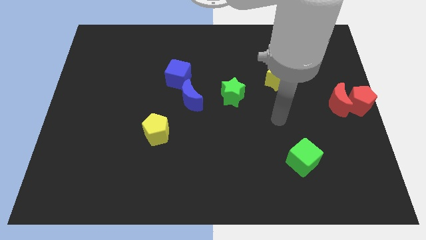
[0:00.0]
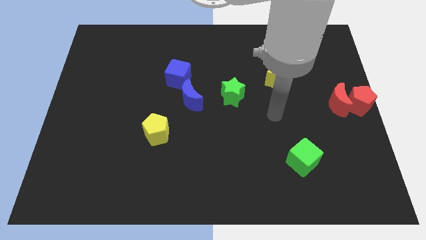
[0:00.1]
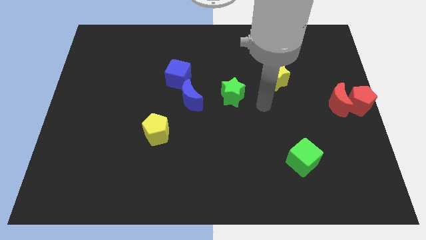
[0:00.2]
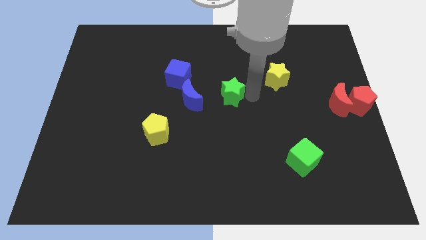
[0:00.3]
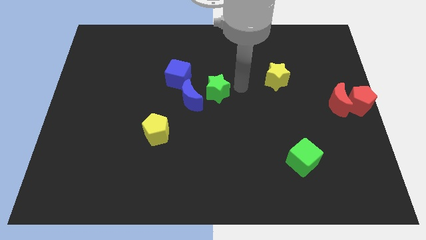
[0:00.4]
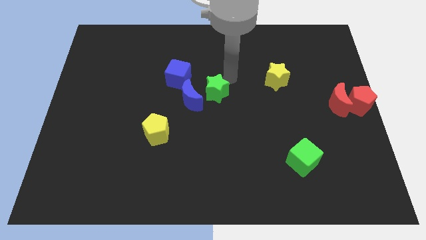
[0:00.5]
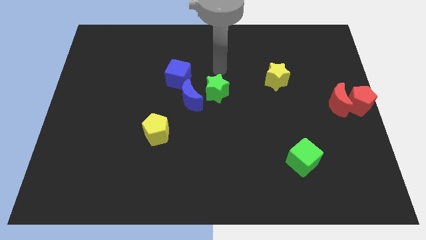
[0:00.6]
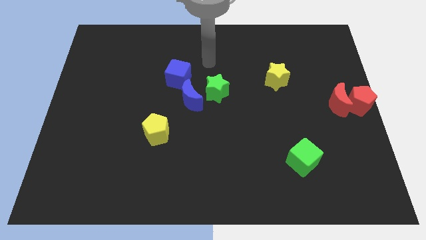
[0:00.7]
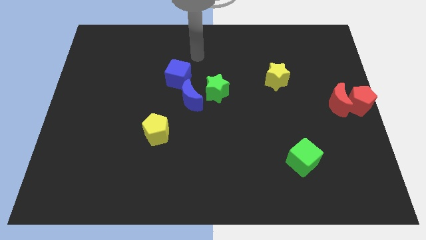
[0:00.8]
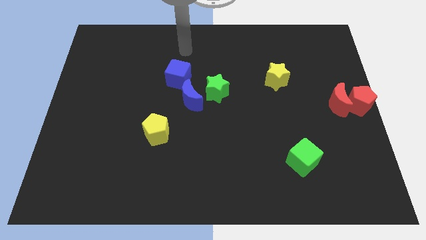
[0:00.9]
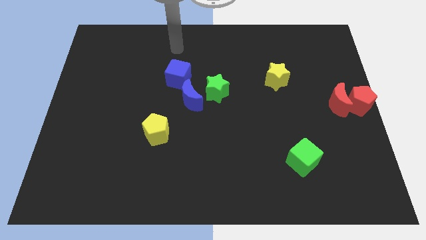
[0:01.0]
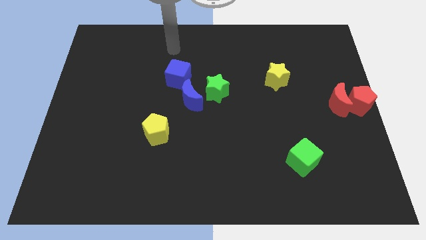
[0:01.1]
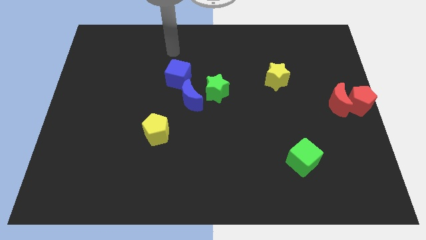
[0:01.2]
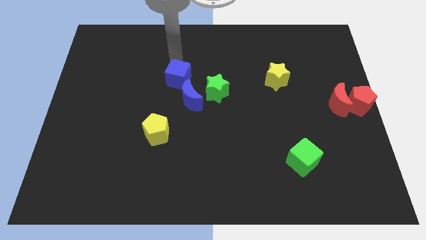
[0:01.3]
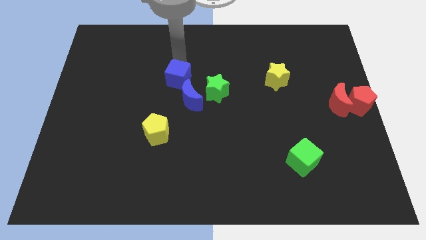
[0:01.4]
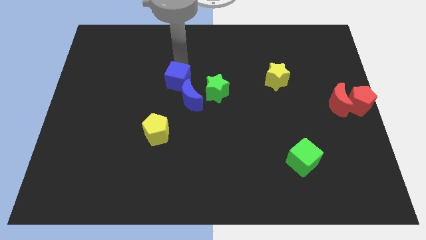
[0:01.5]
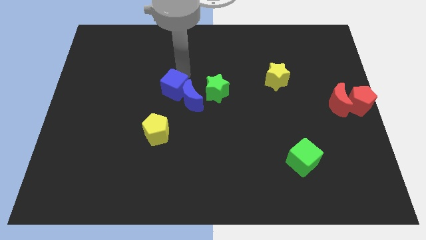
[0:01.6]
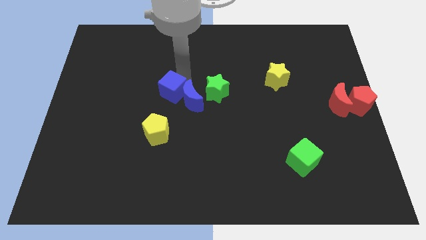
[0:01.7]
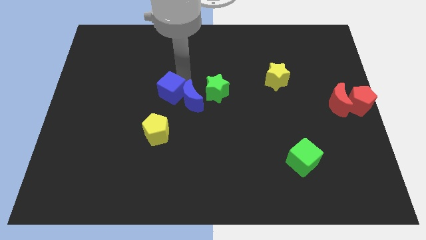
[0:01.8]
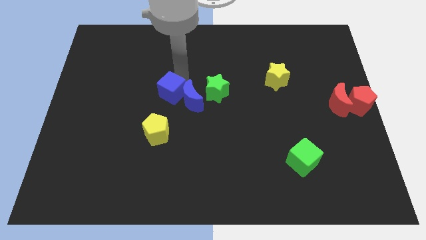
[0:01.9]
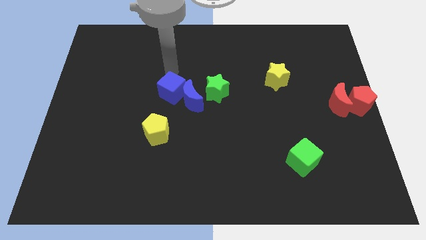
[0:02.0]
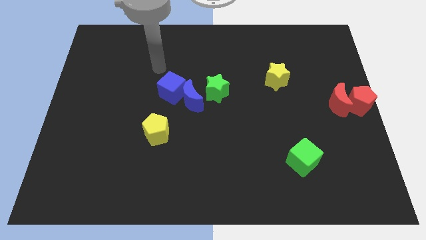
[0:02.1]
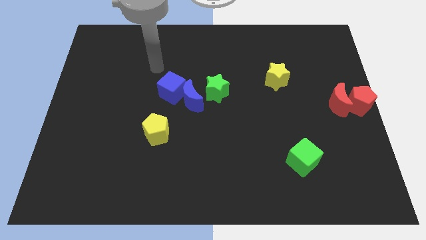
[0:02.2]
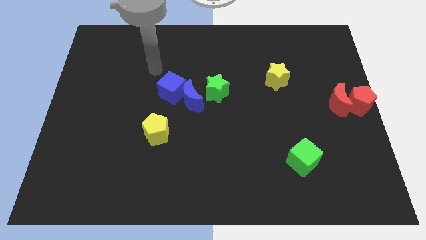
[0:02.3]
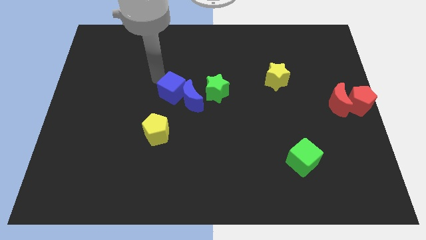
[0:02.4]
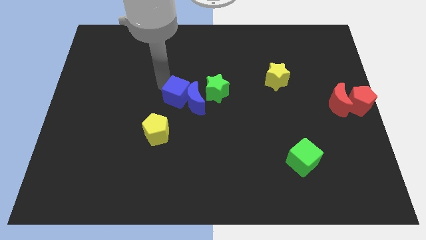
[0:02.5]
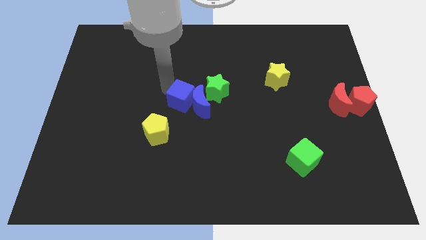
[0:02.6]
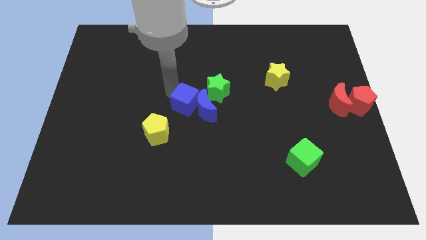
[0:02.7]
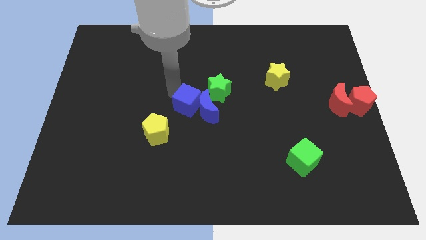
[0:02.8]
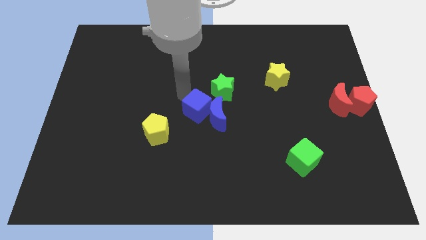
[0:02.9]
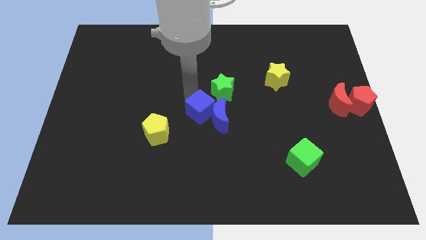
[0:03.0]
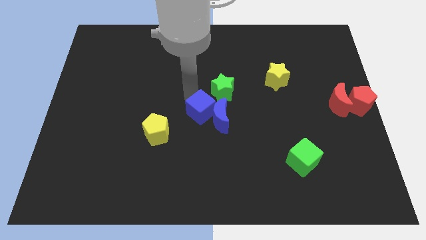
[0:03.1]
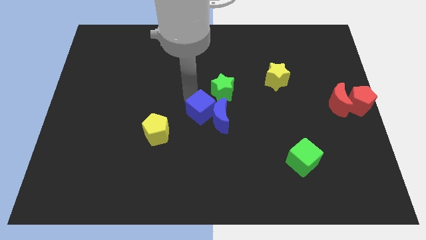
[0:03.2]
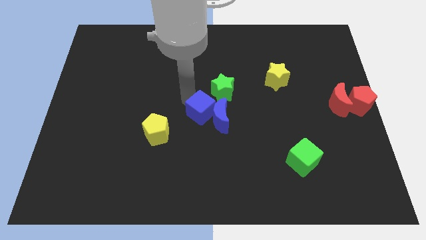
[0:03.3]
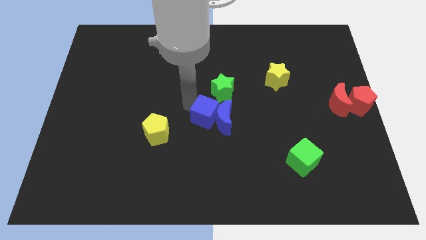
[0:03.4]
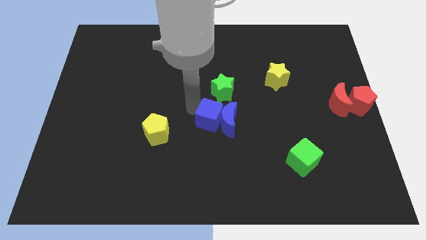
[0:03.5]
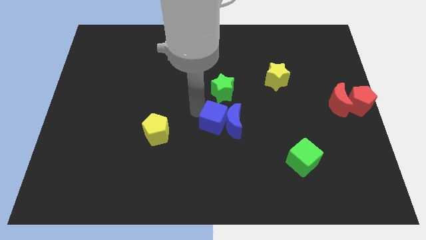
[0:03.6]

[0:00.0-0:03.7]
push both the blue blocks at the bottom side of the green star

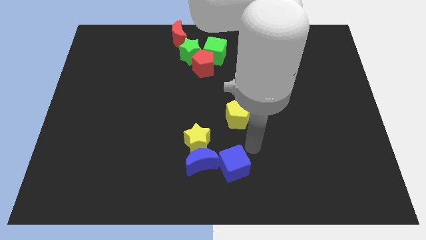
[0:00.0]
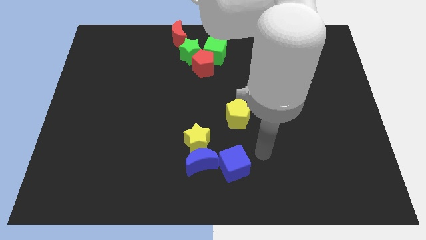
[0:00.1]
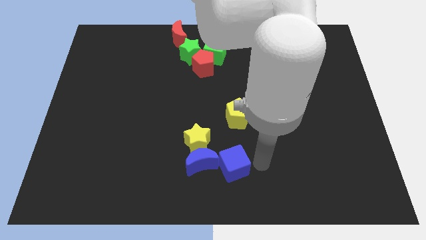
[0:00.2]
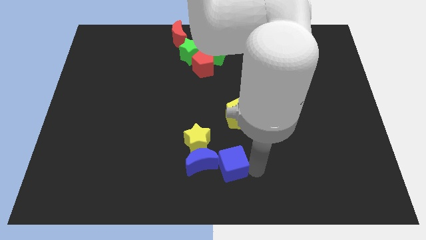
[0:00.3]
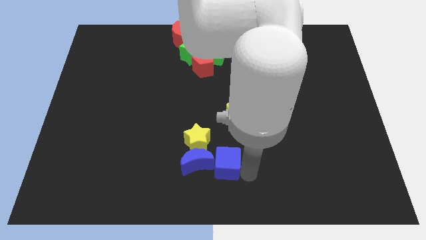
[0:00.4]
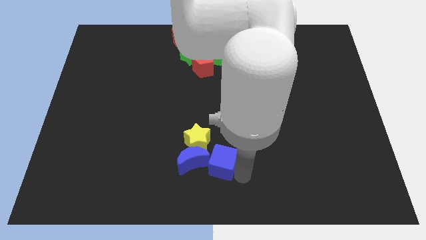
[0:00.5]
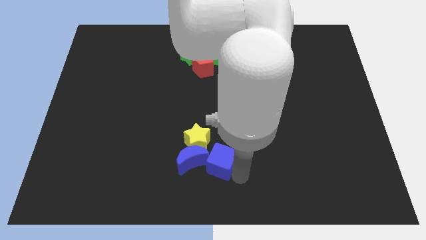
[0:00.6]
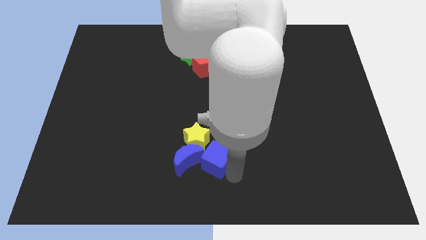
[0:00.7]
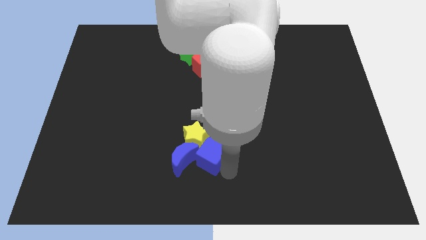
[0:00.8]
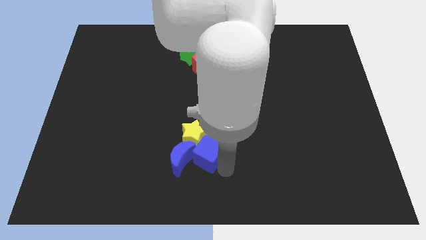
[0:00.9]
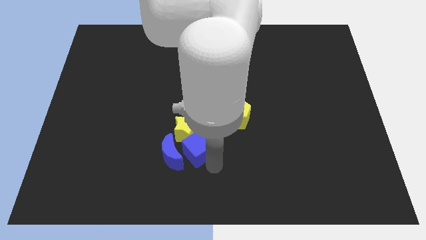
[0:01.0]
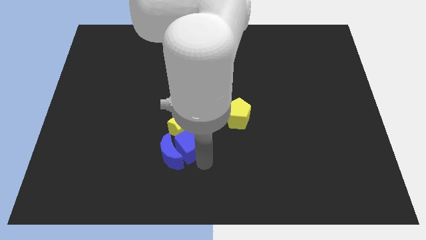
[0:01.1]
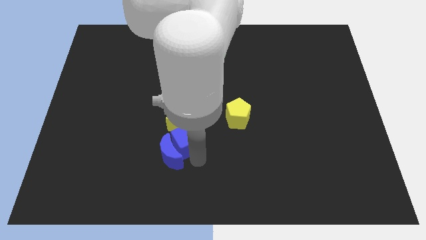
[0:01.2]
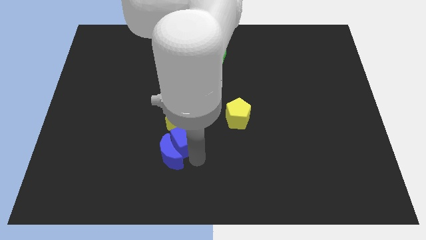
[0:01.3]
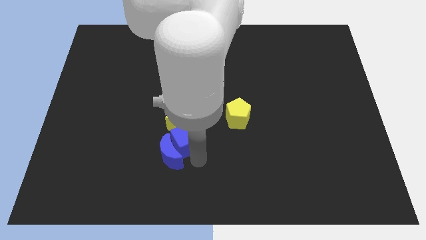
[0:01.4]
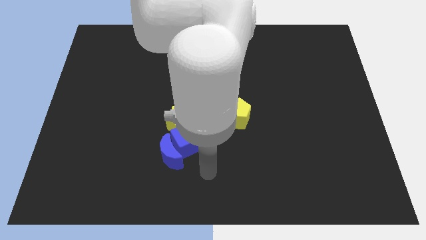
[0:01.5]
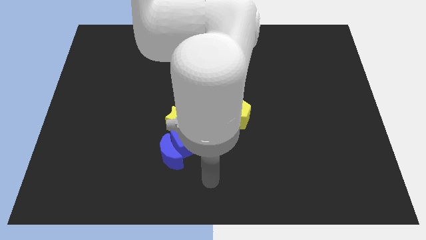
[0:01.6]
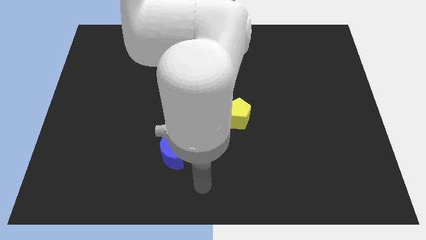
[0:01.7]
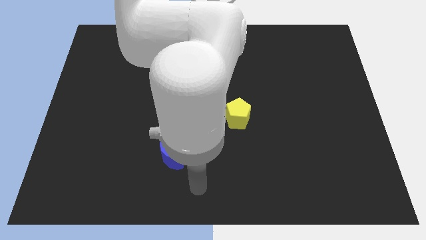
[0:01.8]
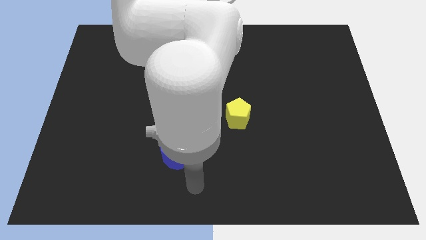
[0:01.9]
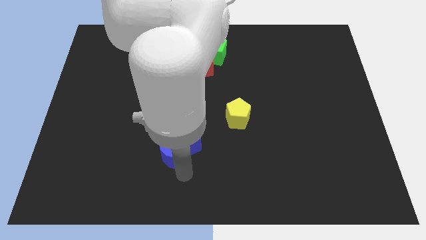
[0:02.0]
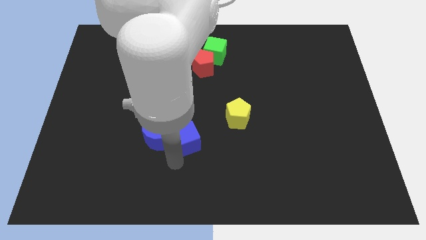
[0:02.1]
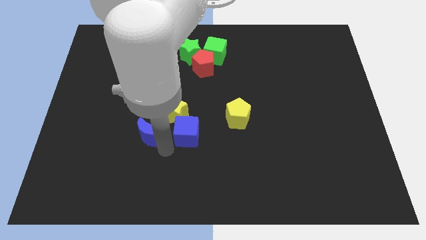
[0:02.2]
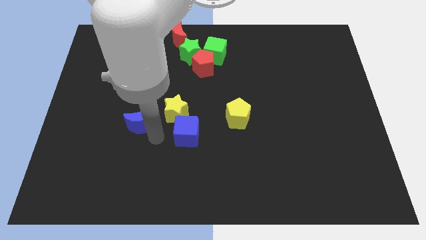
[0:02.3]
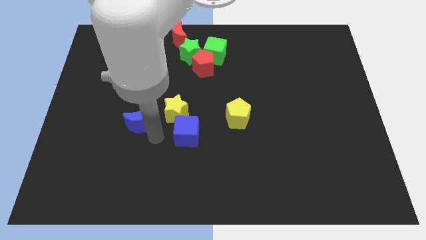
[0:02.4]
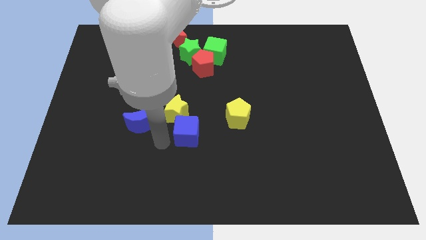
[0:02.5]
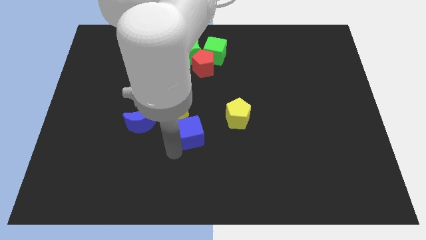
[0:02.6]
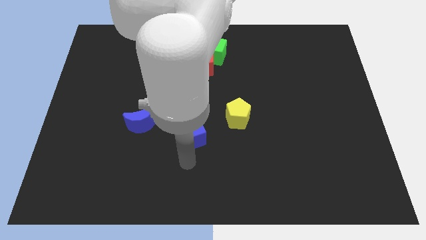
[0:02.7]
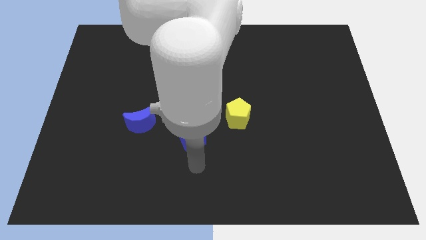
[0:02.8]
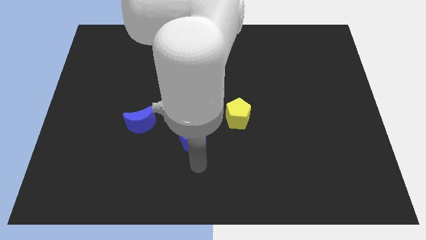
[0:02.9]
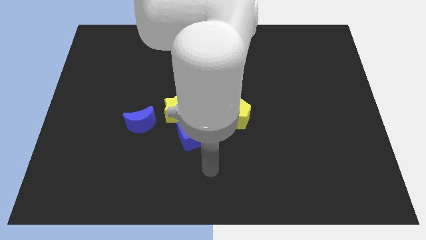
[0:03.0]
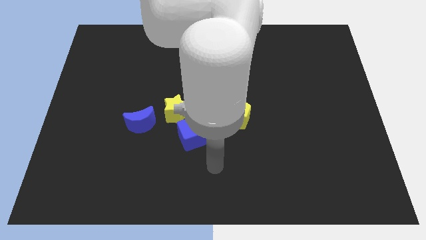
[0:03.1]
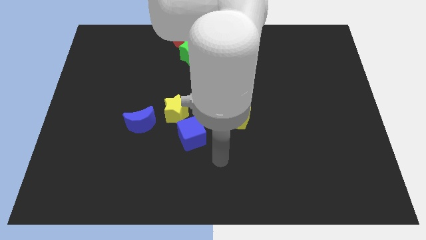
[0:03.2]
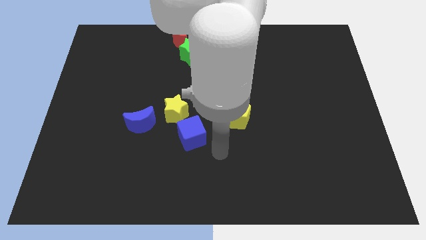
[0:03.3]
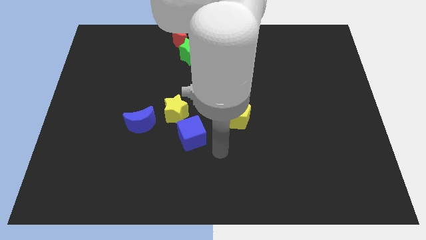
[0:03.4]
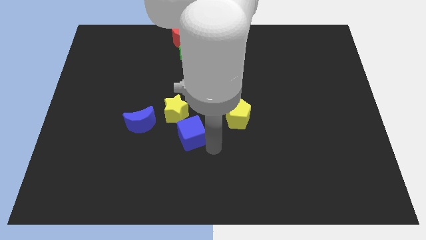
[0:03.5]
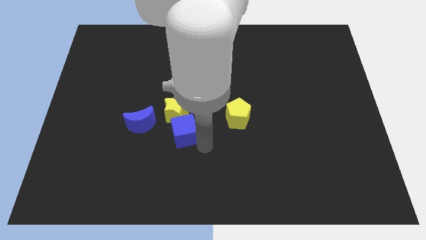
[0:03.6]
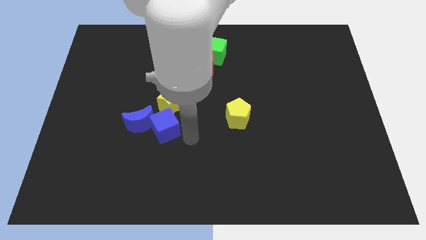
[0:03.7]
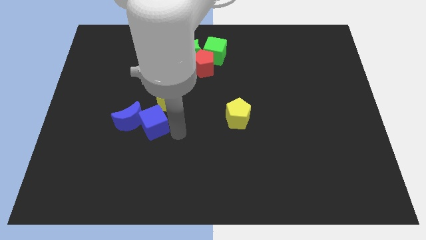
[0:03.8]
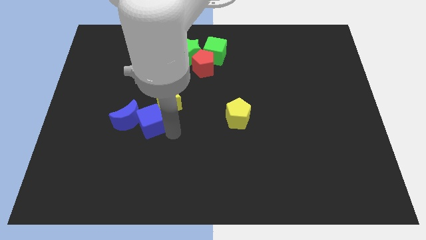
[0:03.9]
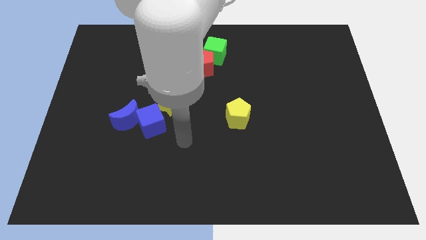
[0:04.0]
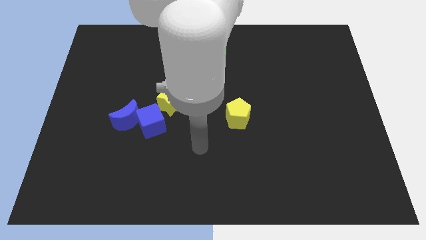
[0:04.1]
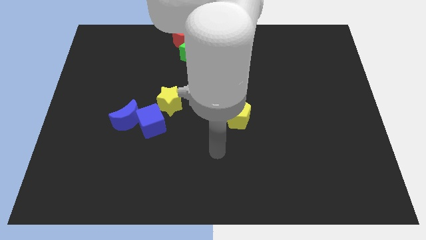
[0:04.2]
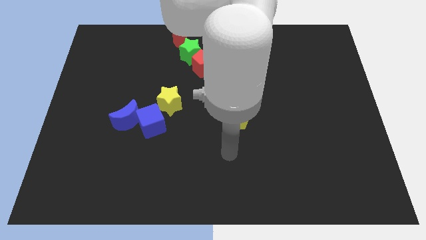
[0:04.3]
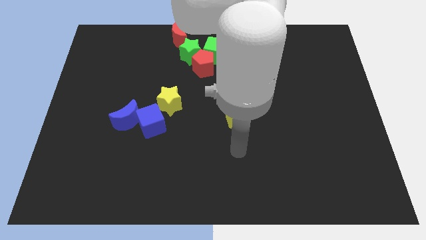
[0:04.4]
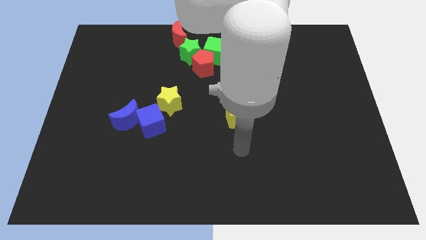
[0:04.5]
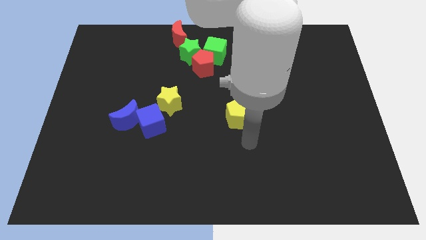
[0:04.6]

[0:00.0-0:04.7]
move blue blocks to the left of the yellow star

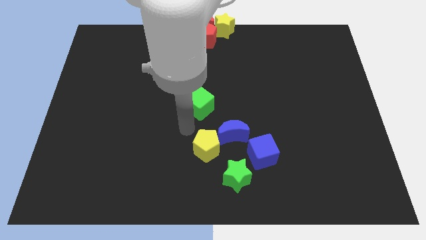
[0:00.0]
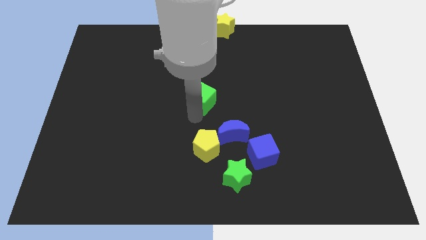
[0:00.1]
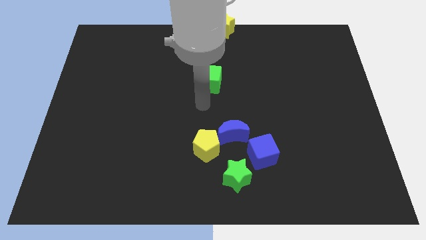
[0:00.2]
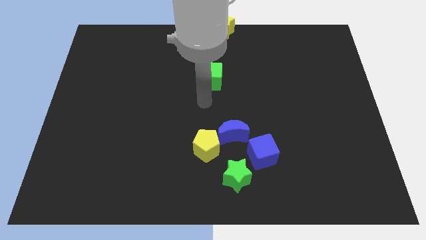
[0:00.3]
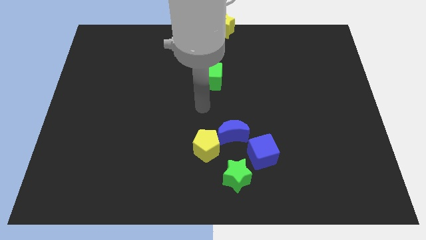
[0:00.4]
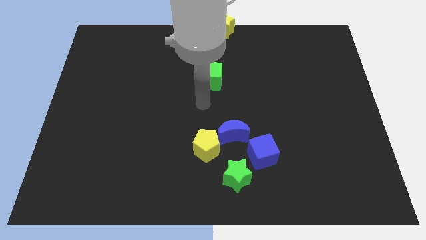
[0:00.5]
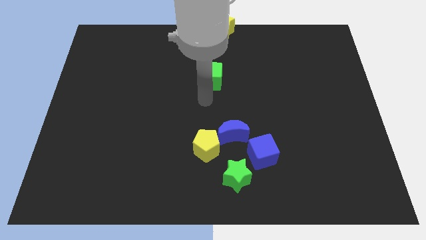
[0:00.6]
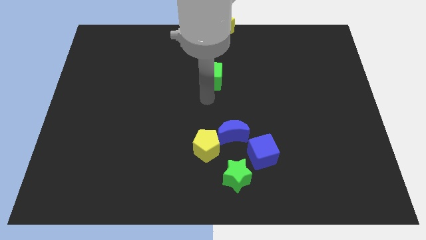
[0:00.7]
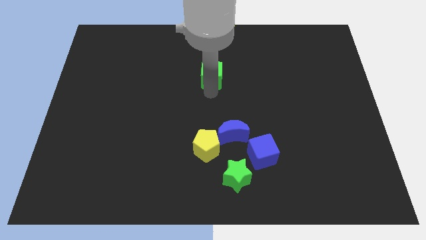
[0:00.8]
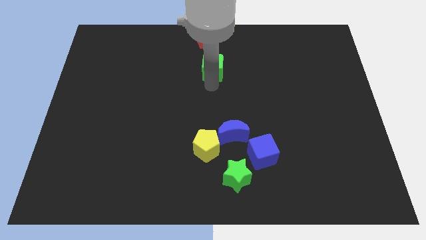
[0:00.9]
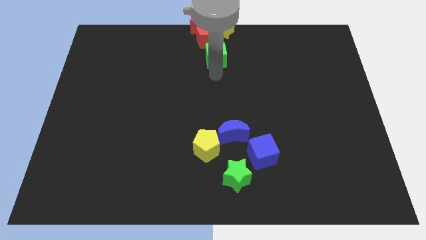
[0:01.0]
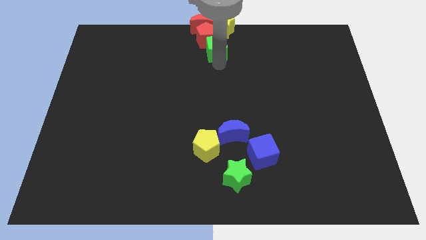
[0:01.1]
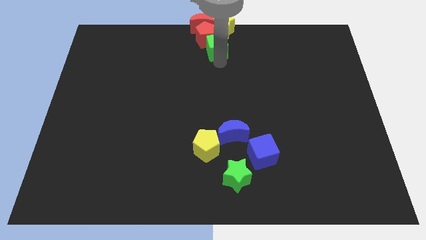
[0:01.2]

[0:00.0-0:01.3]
move the green cube down to the red pentagon
